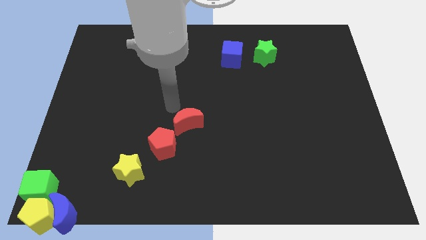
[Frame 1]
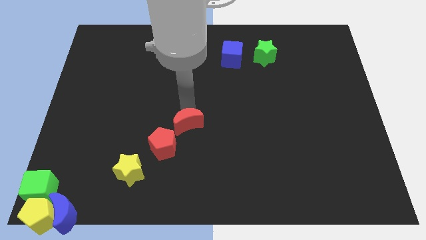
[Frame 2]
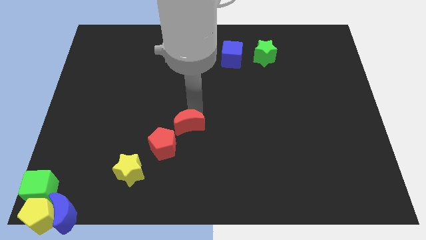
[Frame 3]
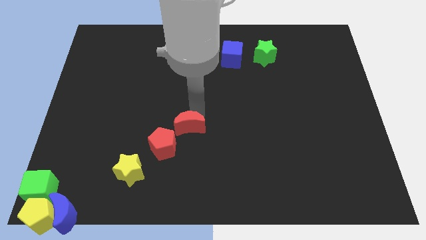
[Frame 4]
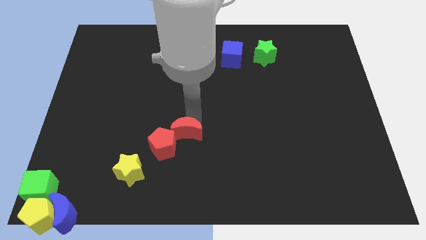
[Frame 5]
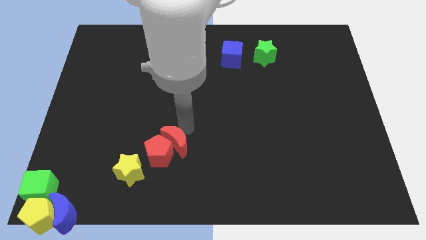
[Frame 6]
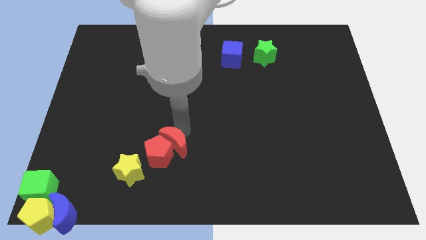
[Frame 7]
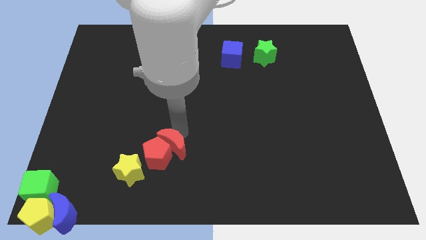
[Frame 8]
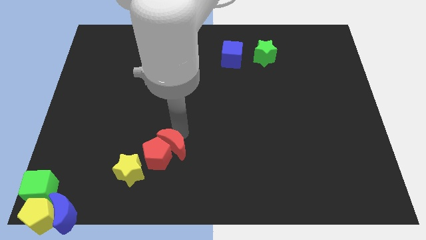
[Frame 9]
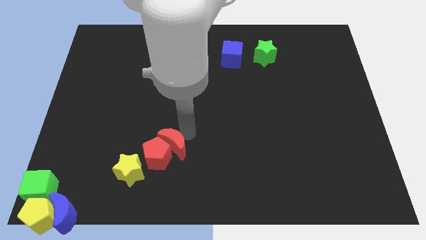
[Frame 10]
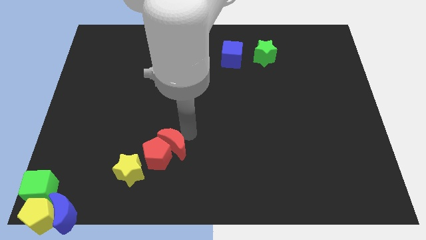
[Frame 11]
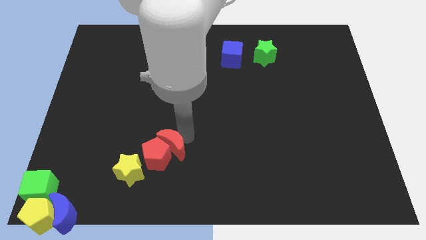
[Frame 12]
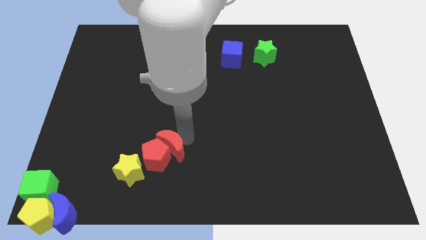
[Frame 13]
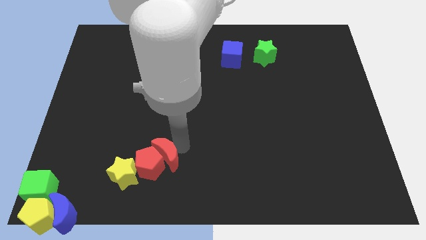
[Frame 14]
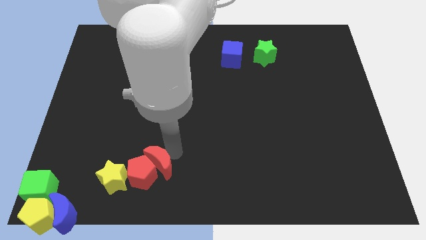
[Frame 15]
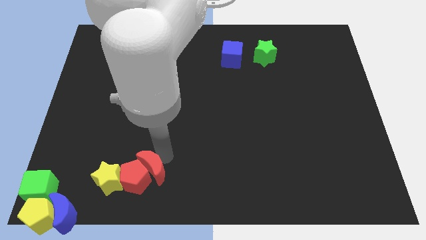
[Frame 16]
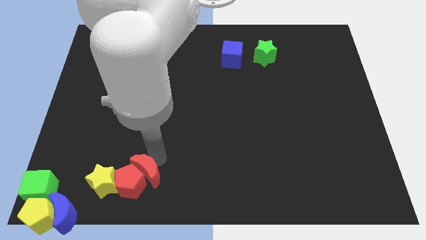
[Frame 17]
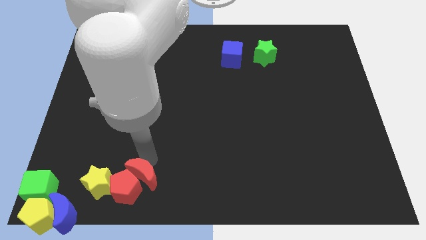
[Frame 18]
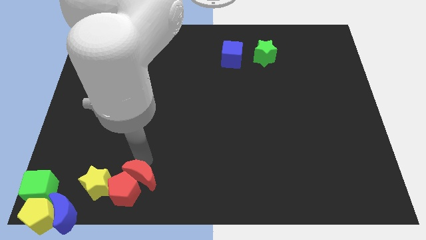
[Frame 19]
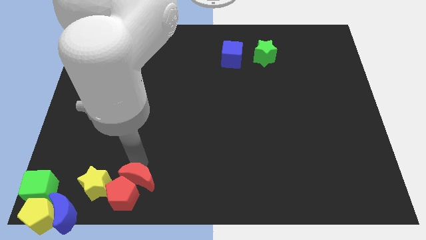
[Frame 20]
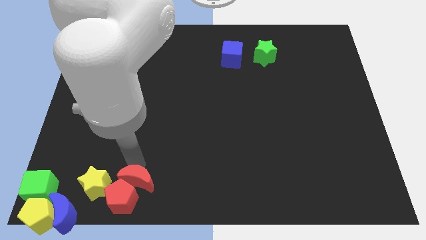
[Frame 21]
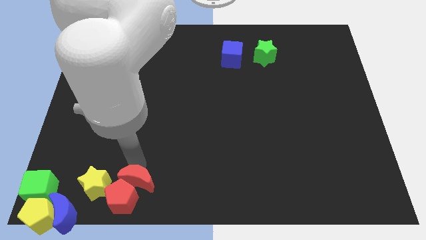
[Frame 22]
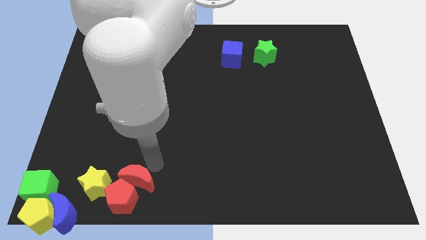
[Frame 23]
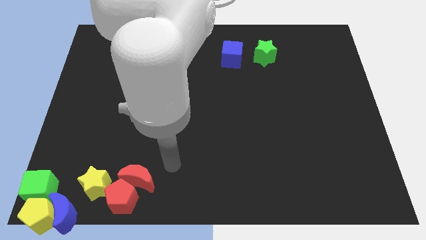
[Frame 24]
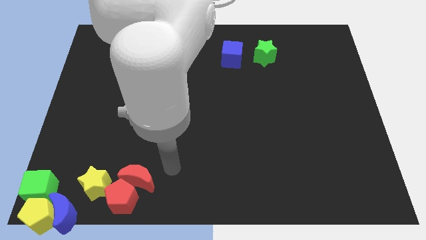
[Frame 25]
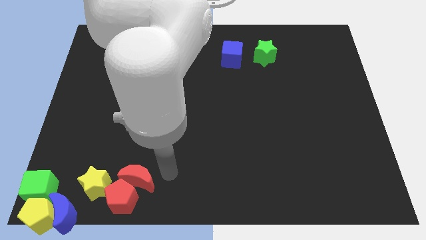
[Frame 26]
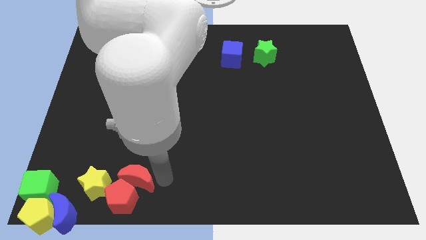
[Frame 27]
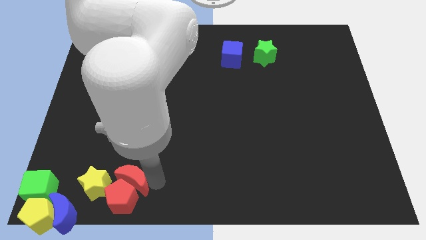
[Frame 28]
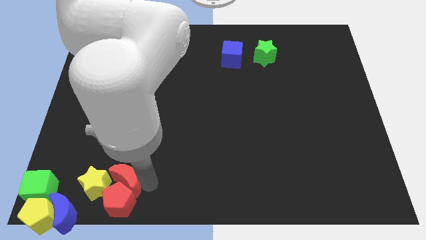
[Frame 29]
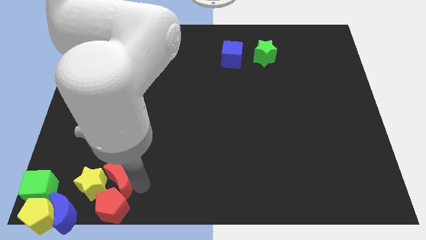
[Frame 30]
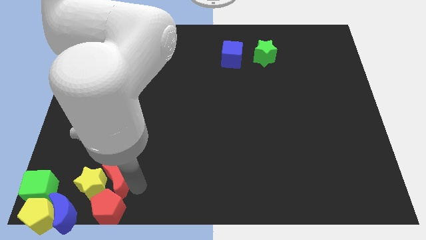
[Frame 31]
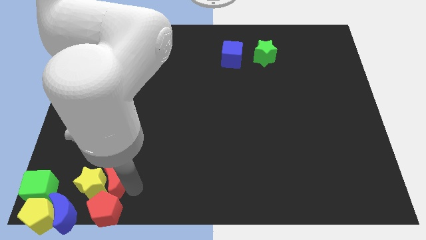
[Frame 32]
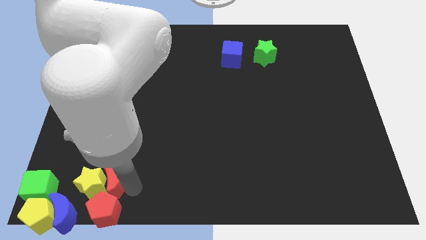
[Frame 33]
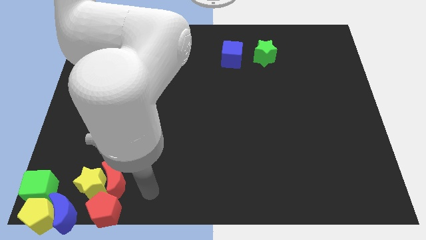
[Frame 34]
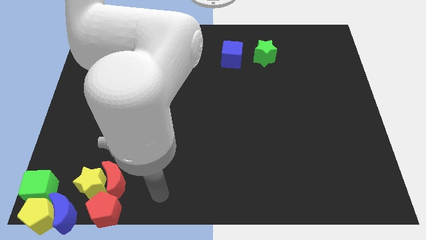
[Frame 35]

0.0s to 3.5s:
move the red crescent into yellow star

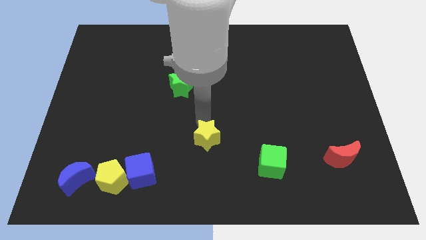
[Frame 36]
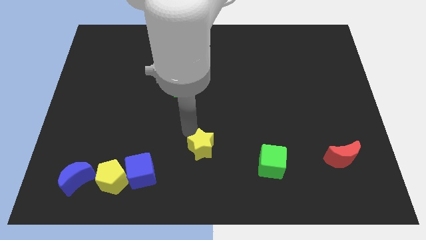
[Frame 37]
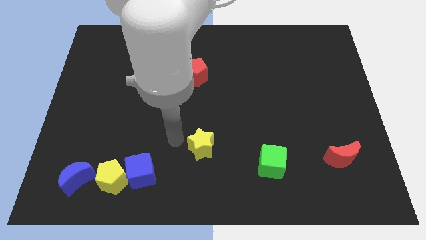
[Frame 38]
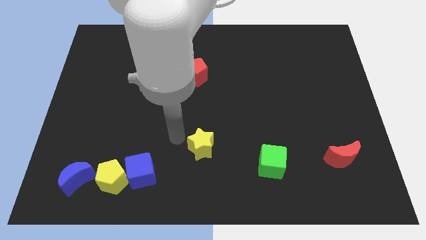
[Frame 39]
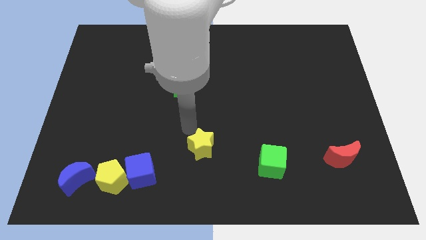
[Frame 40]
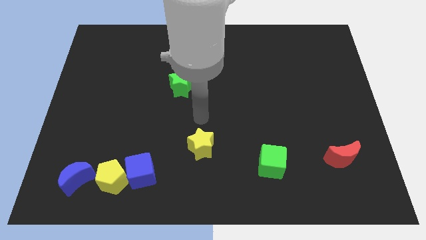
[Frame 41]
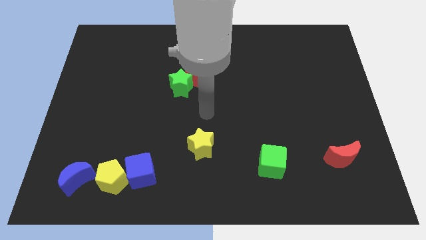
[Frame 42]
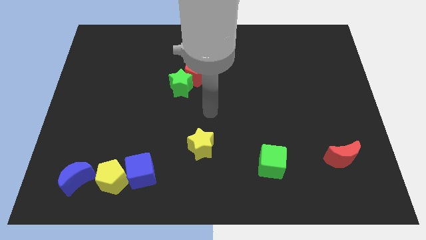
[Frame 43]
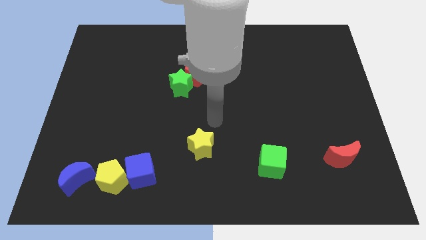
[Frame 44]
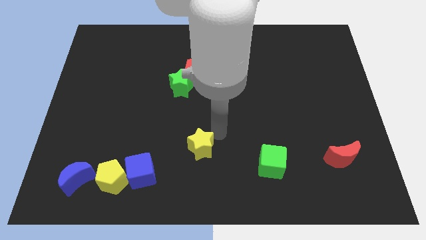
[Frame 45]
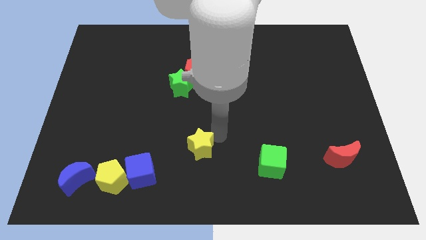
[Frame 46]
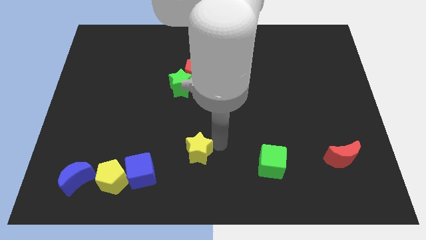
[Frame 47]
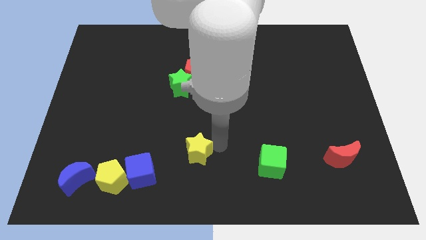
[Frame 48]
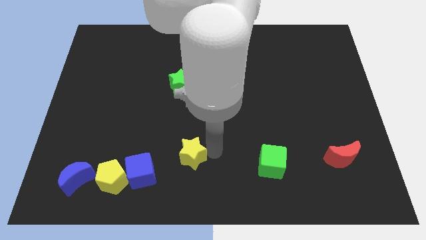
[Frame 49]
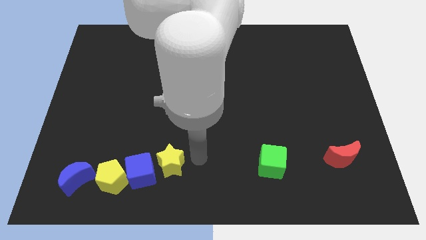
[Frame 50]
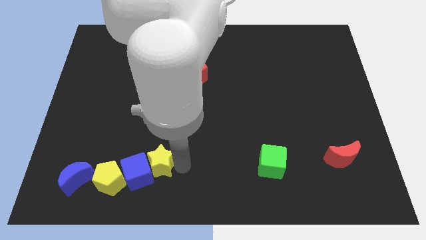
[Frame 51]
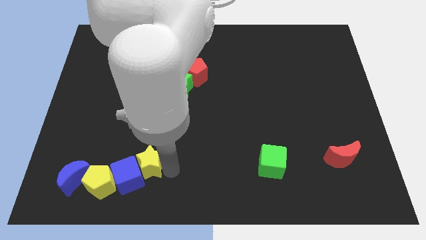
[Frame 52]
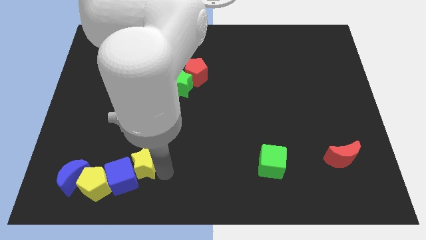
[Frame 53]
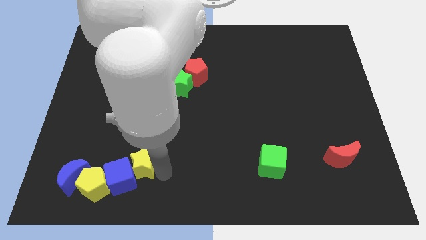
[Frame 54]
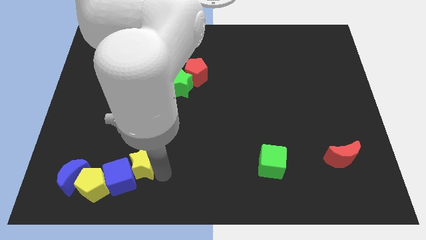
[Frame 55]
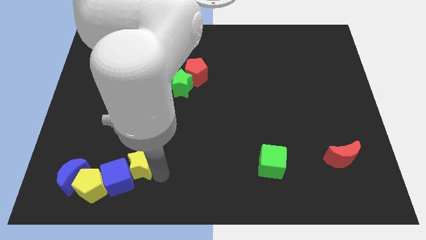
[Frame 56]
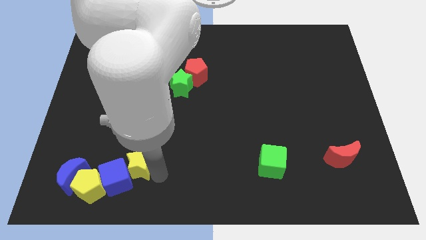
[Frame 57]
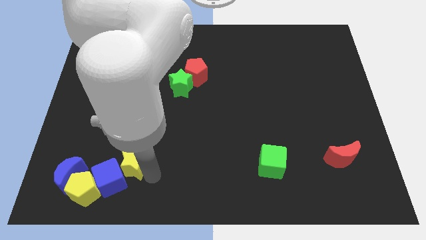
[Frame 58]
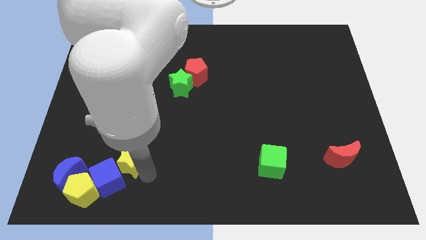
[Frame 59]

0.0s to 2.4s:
push yellow star into group of blocks

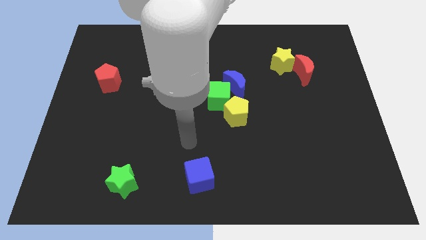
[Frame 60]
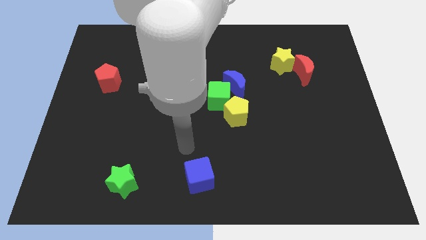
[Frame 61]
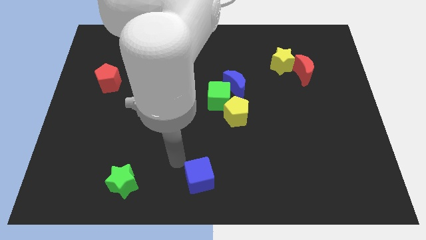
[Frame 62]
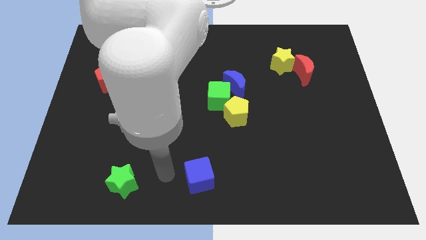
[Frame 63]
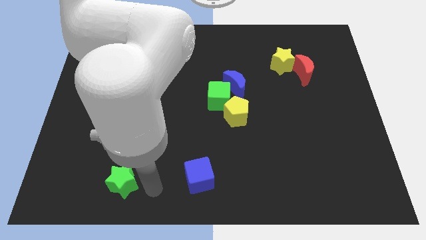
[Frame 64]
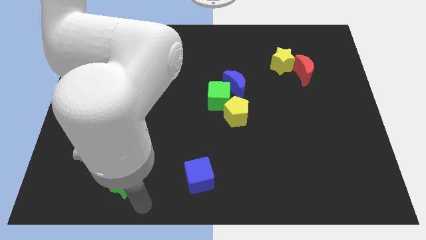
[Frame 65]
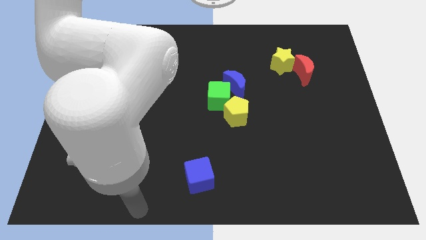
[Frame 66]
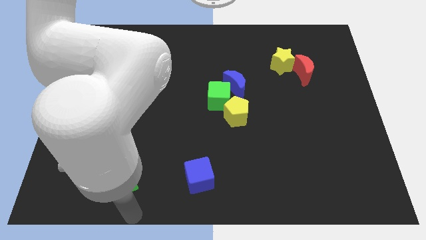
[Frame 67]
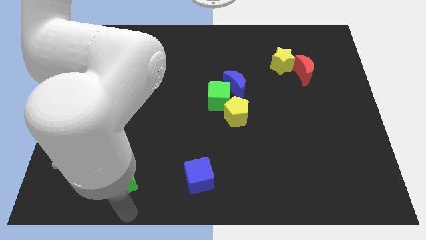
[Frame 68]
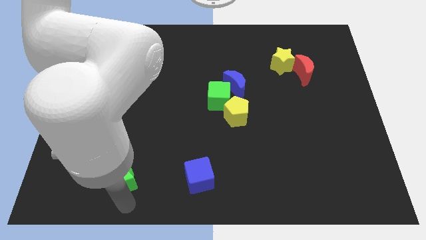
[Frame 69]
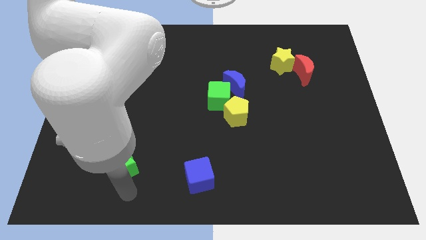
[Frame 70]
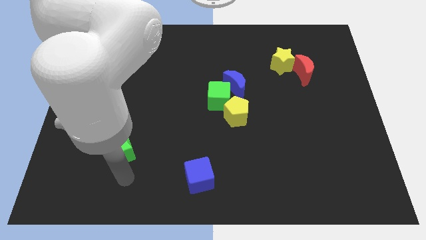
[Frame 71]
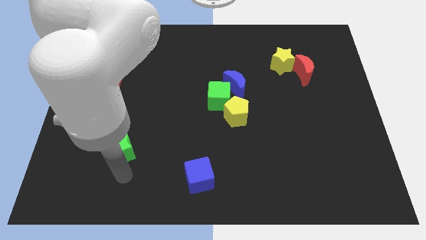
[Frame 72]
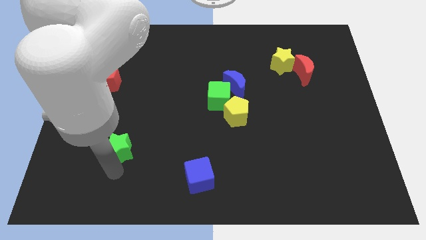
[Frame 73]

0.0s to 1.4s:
push the green star slightly to the top side of the board

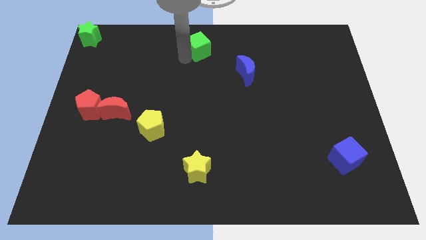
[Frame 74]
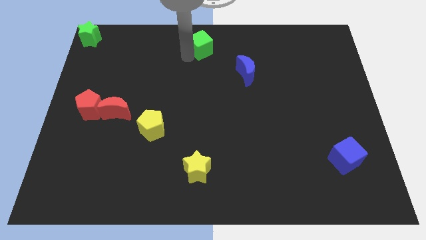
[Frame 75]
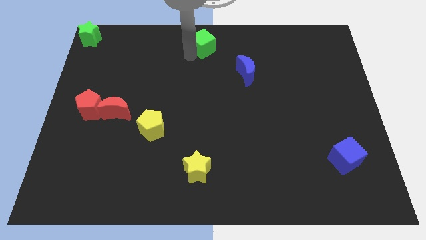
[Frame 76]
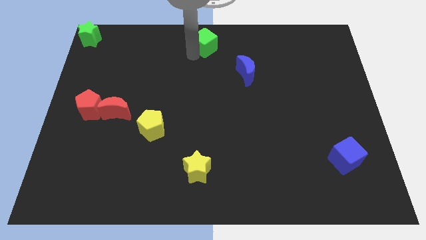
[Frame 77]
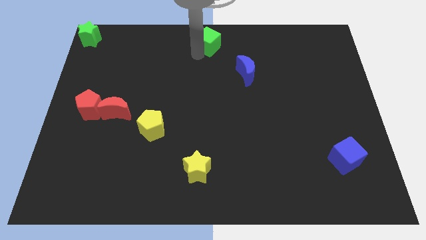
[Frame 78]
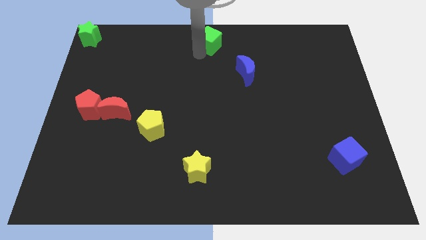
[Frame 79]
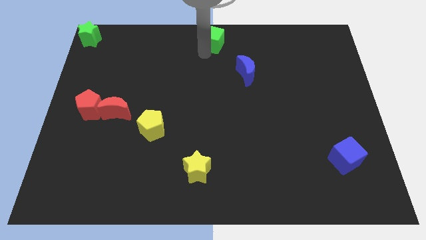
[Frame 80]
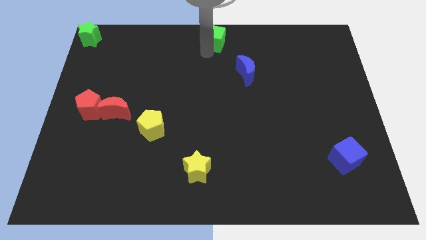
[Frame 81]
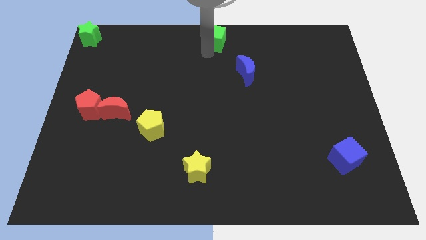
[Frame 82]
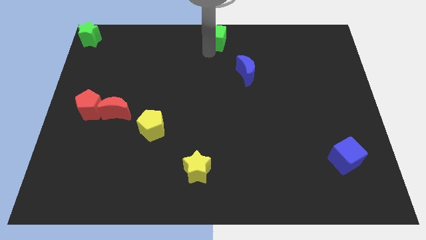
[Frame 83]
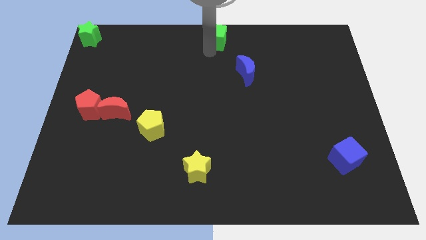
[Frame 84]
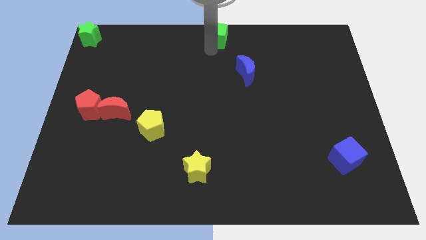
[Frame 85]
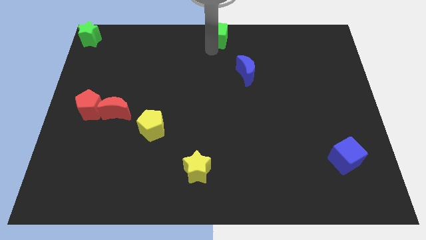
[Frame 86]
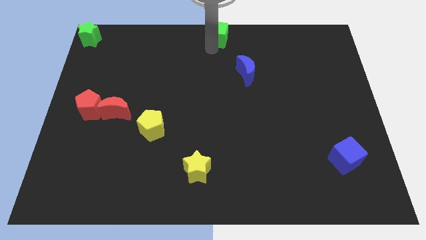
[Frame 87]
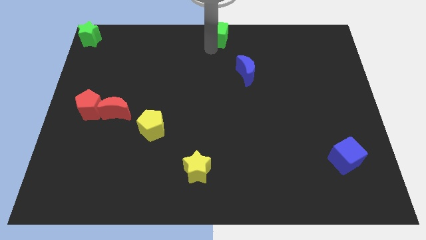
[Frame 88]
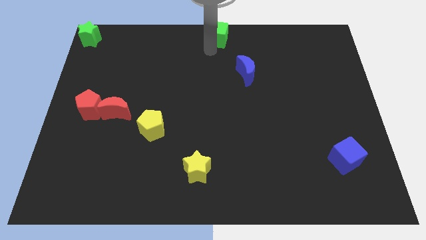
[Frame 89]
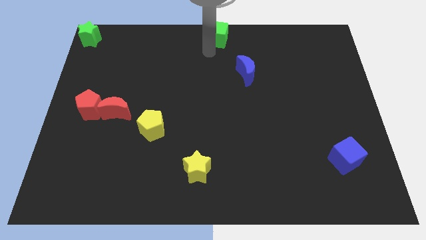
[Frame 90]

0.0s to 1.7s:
move the green cube towards the top center of the board
